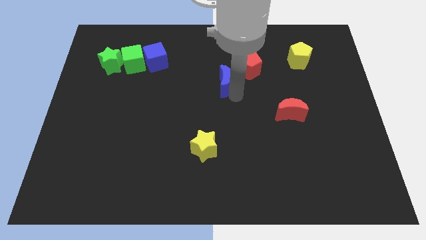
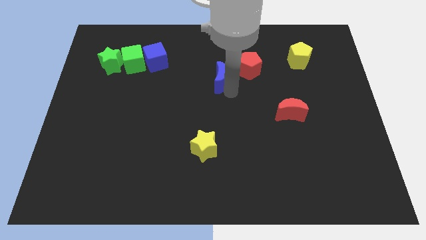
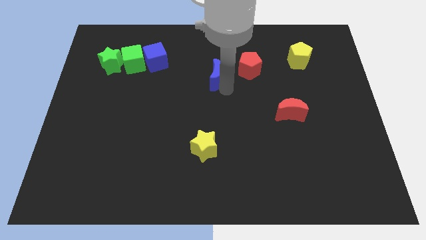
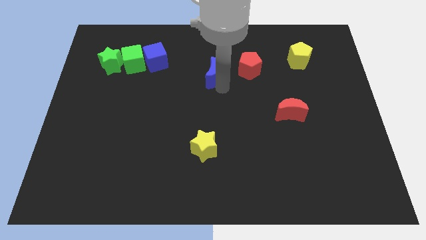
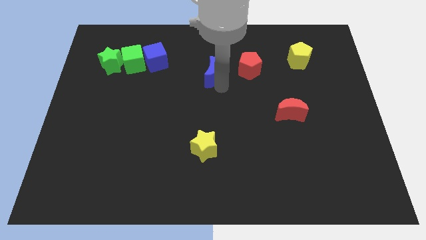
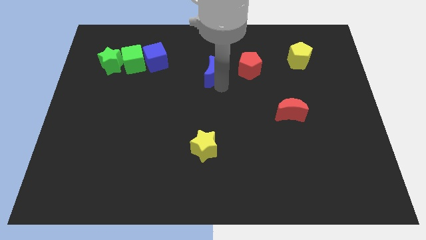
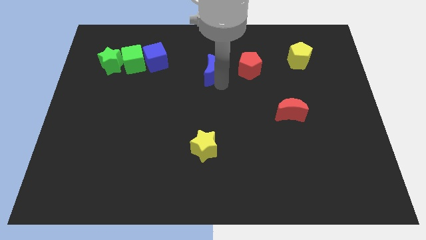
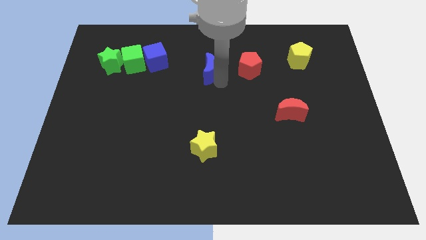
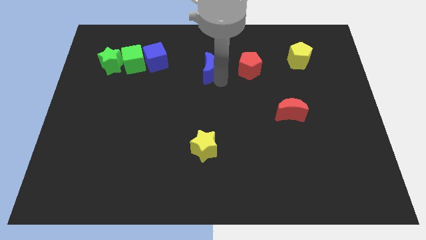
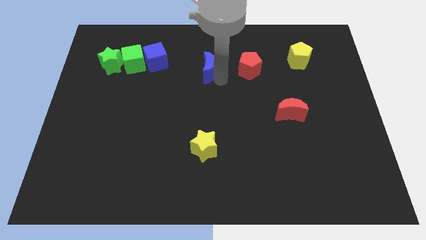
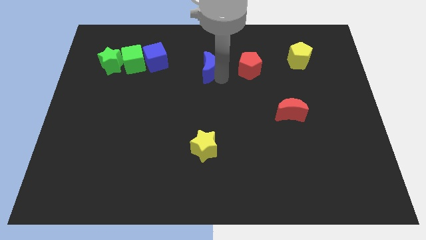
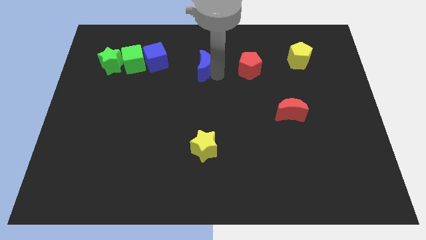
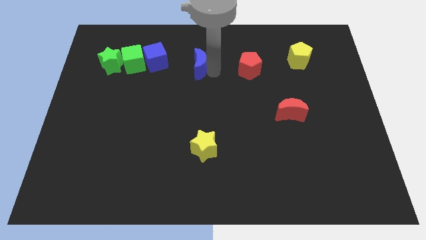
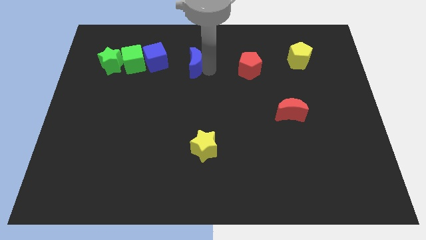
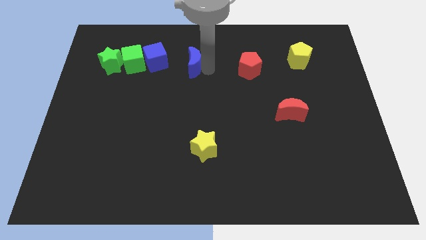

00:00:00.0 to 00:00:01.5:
place the blue moon in between the blue cube and red pentagon

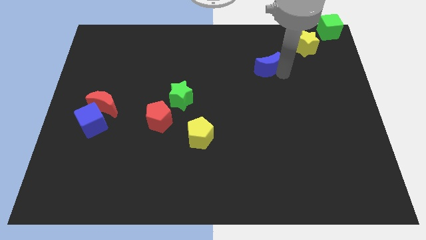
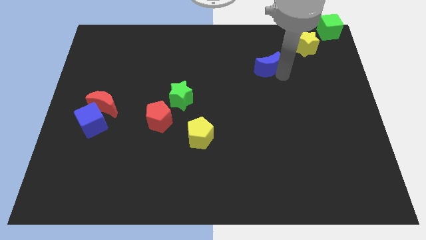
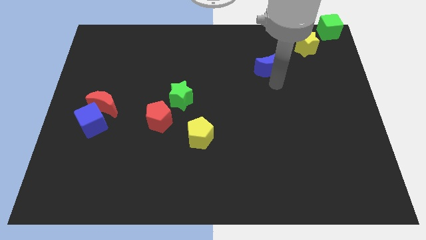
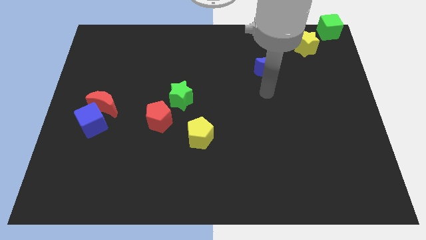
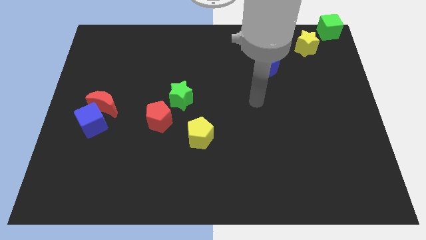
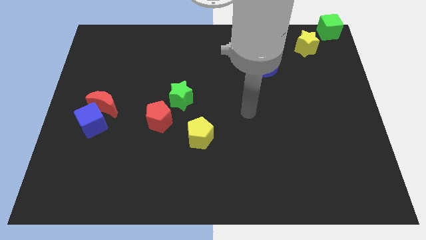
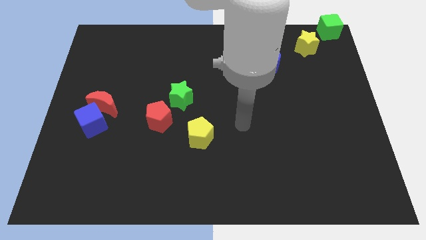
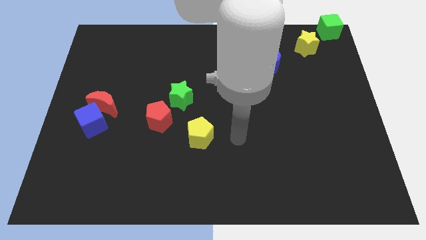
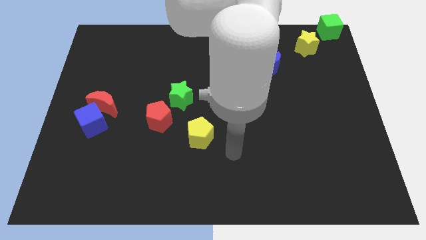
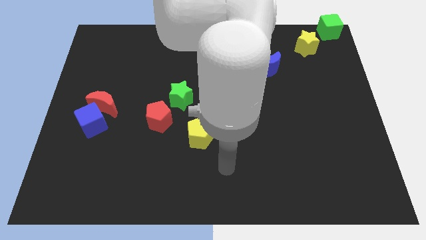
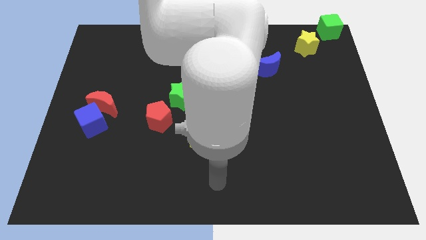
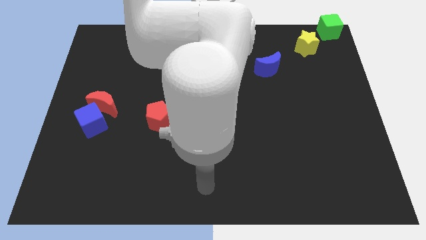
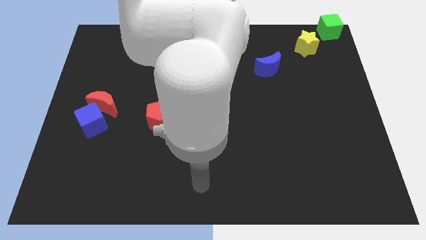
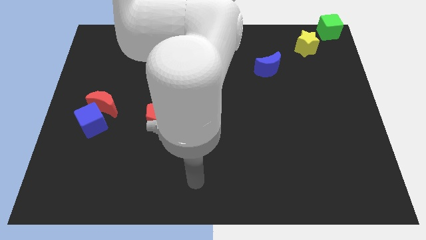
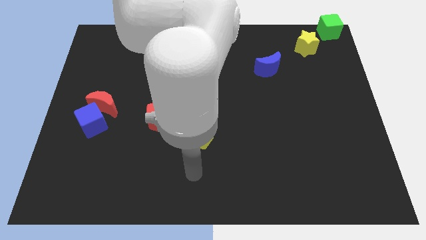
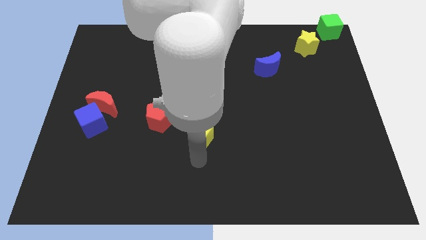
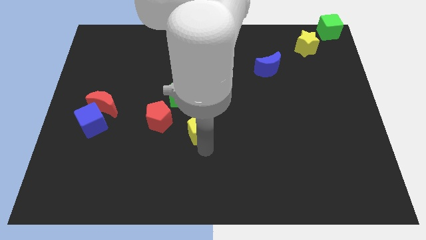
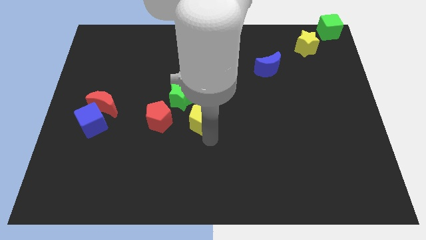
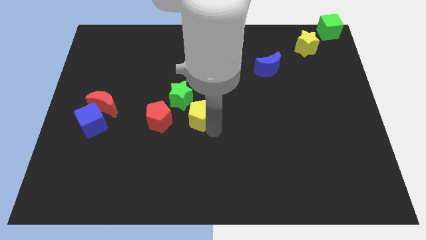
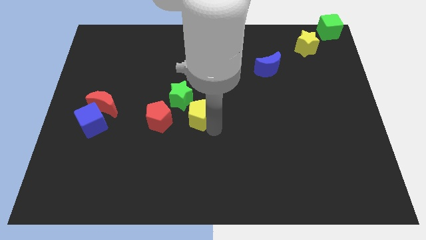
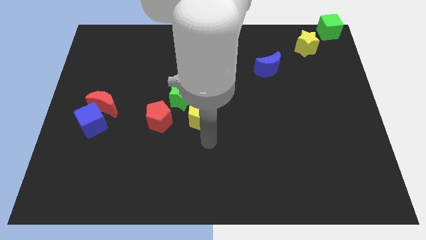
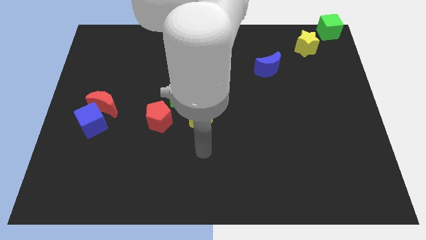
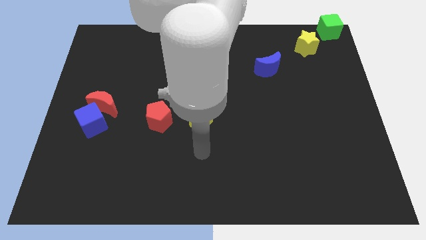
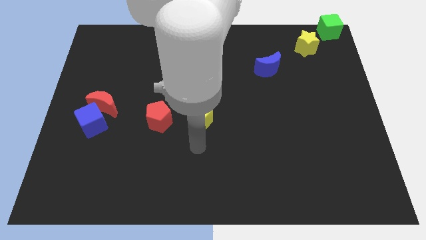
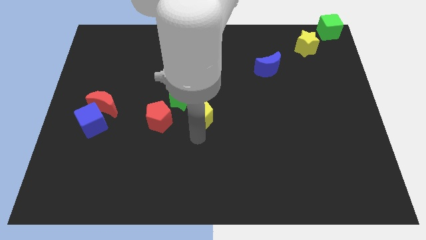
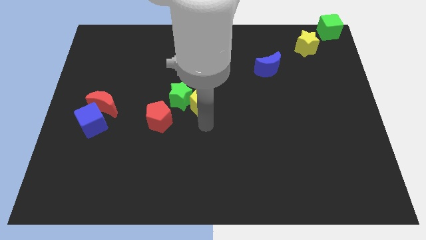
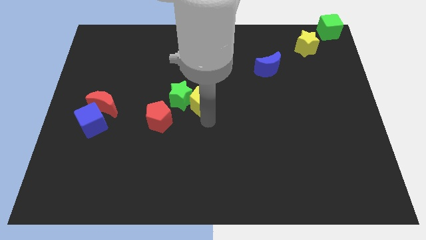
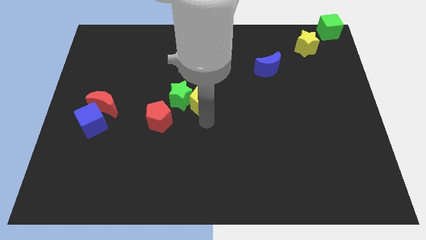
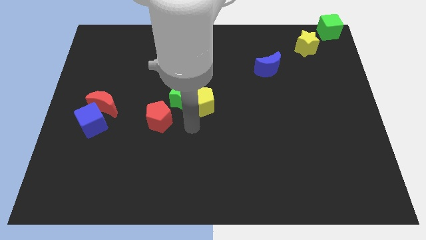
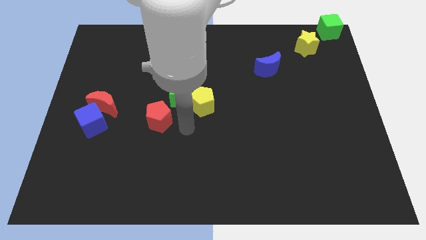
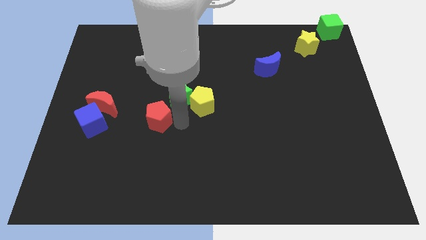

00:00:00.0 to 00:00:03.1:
move the yellow pentagon slightly to the right of the green star

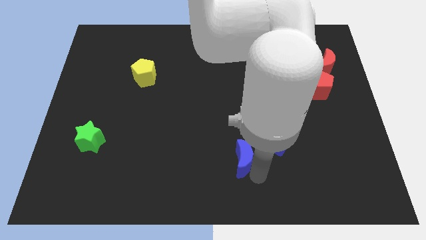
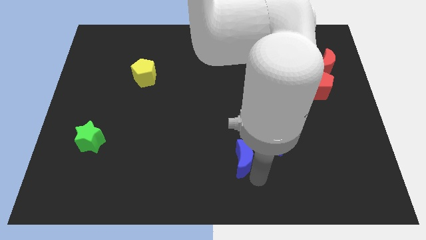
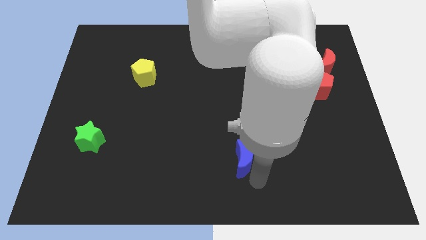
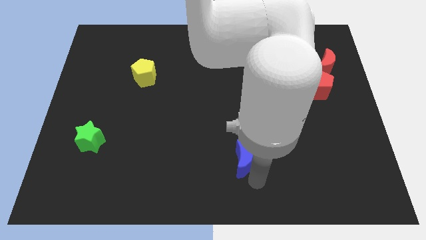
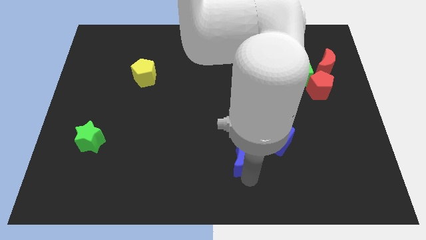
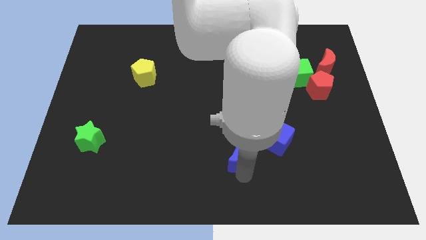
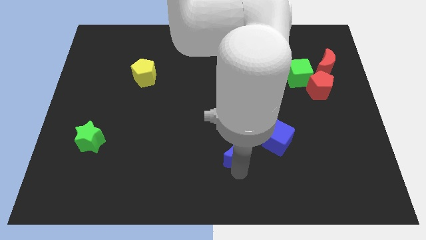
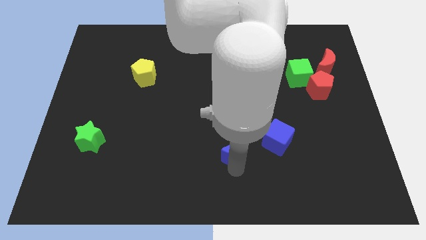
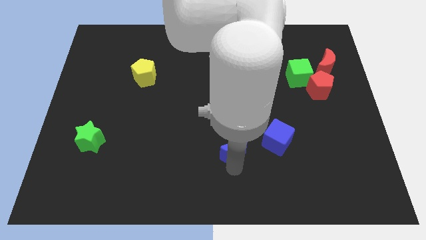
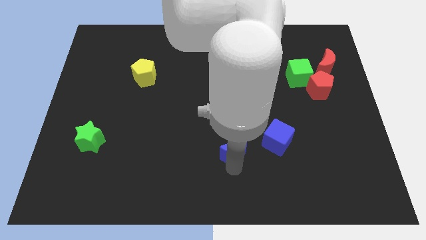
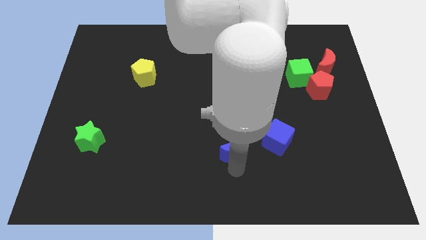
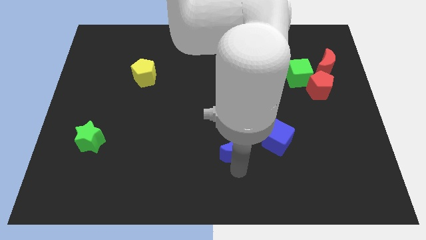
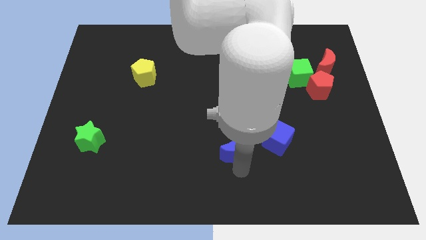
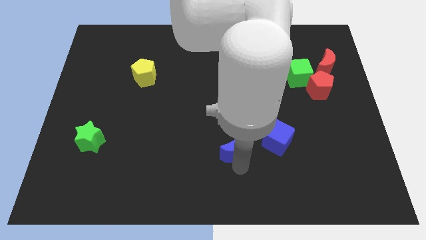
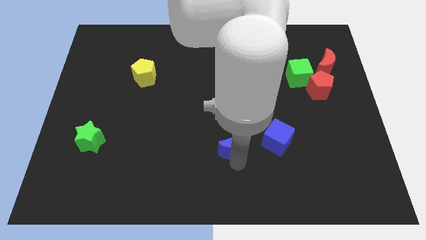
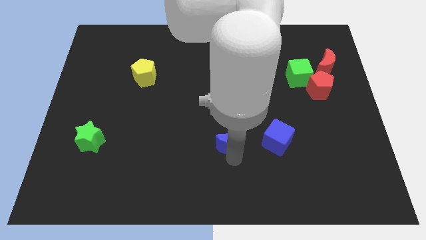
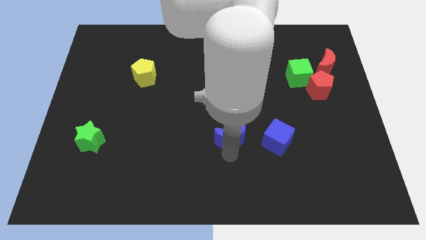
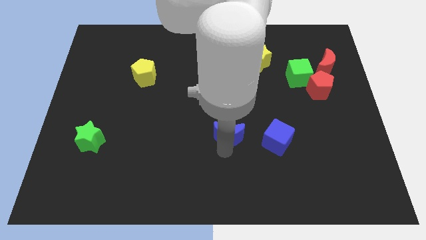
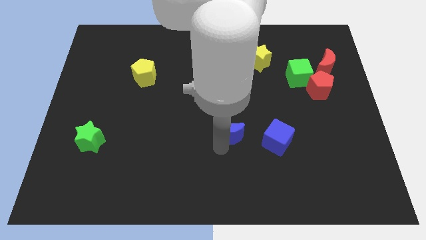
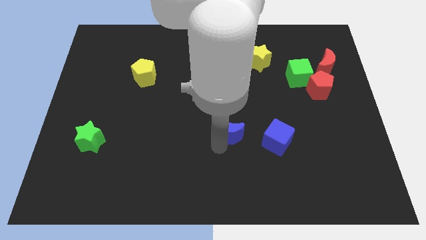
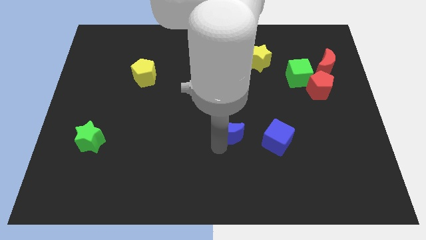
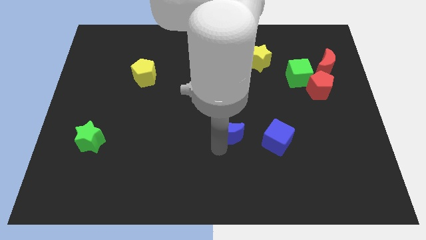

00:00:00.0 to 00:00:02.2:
slide the blue moon towards the center of the board

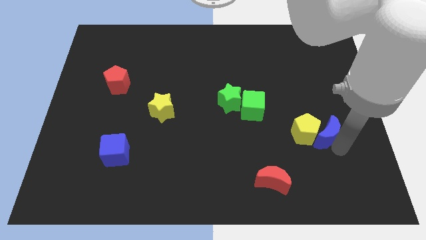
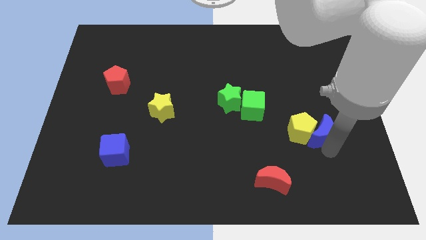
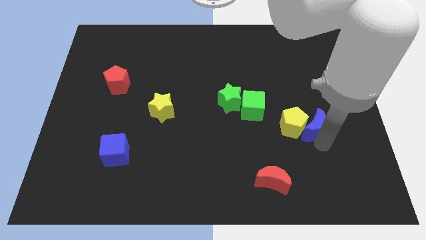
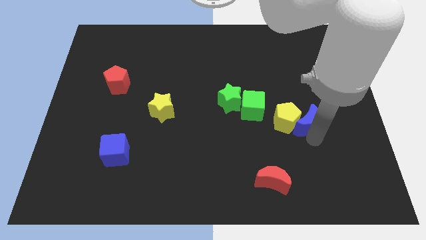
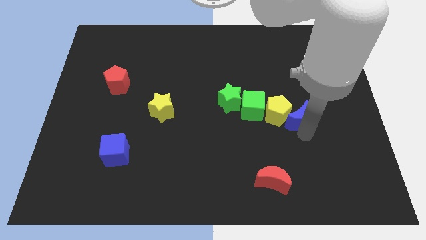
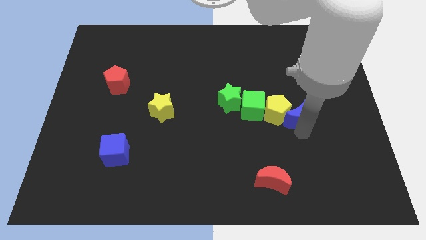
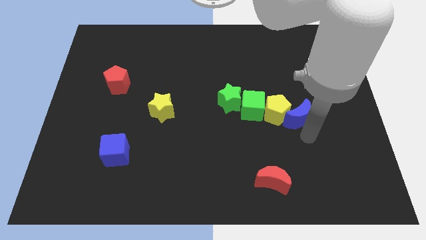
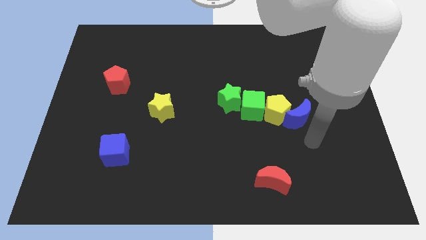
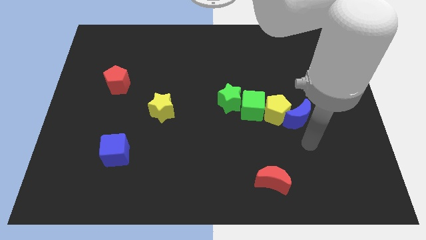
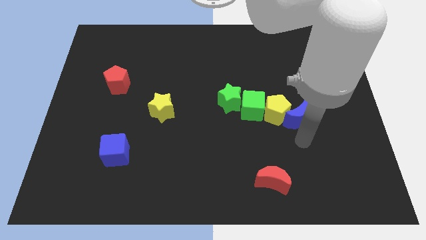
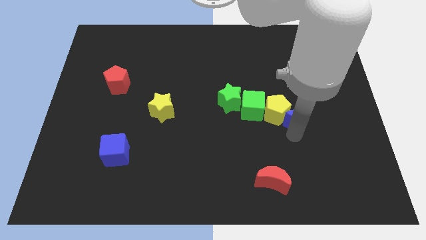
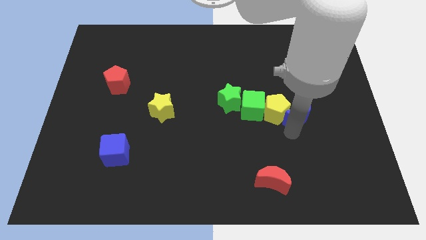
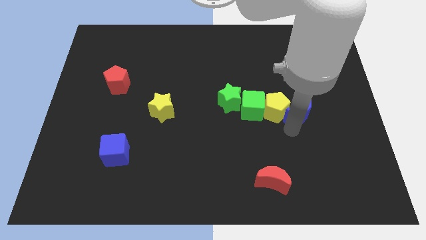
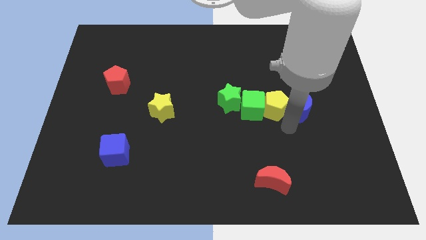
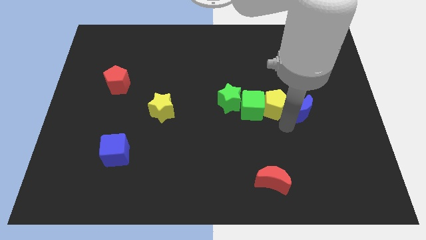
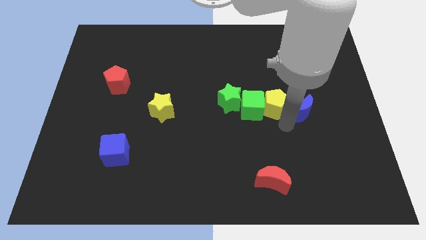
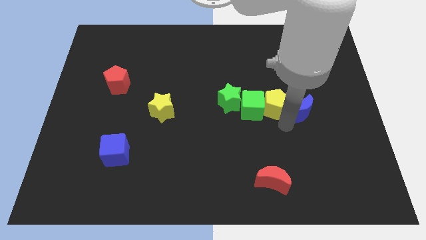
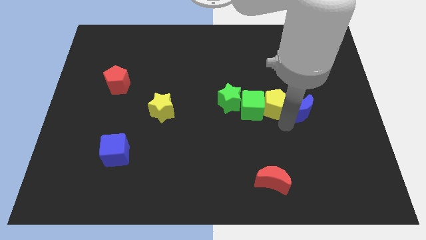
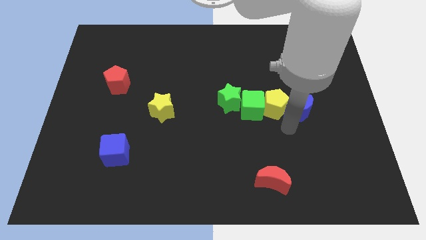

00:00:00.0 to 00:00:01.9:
push blue crescent and yellow pentagon to the left of green cube
